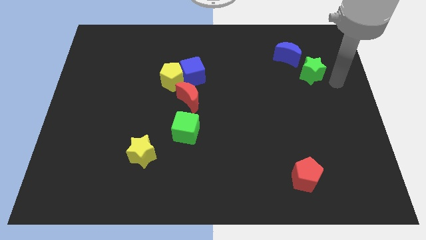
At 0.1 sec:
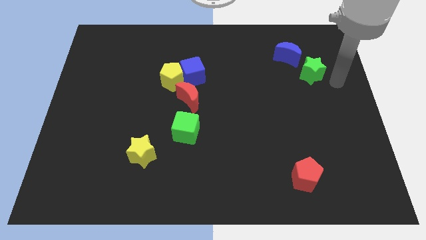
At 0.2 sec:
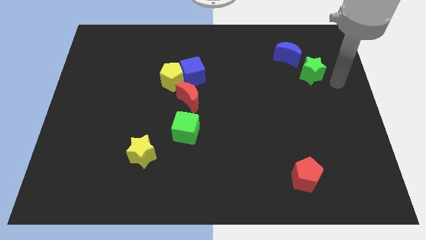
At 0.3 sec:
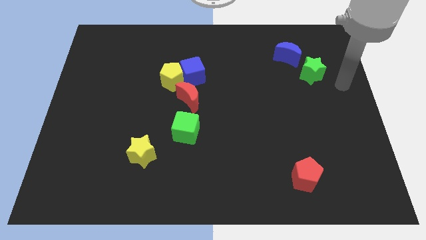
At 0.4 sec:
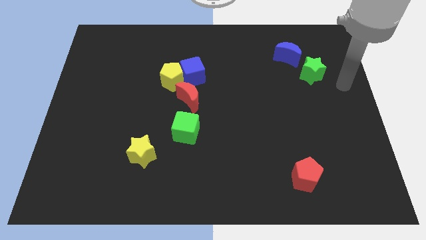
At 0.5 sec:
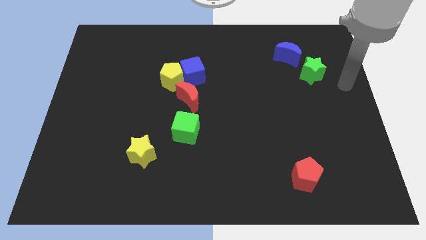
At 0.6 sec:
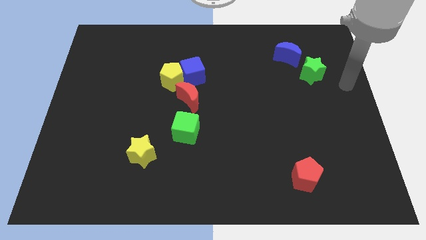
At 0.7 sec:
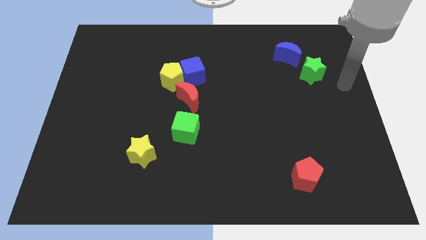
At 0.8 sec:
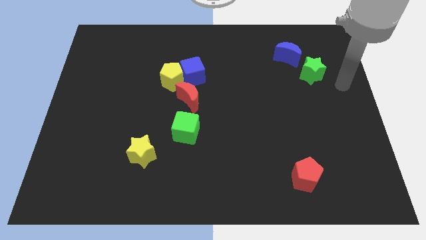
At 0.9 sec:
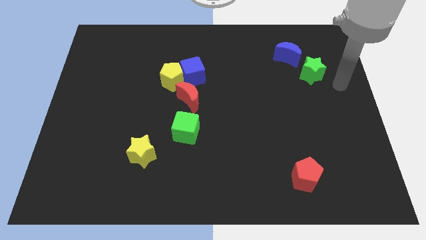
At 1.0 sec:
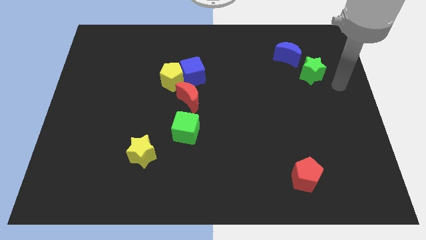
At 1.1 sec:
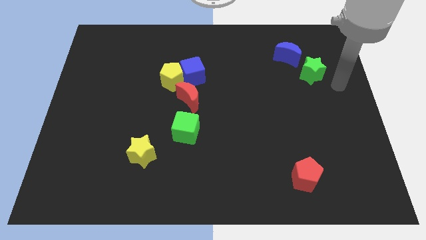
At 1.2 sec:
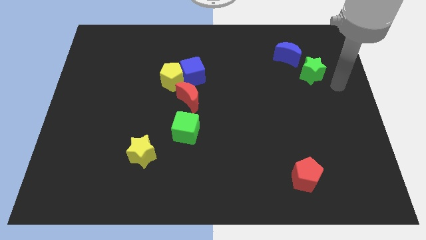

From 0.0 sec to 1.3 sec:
move your arm diagonal right of green star

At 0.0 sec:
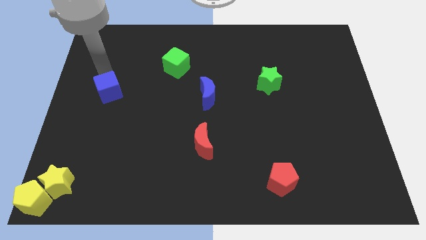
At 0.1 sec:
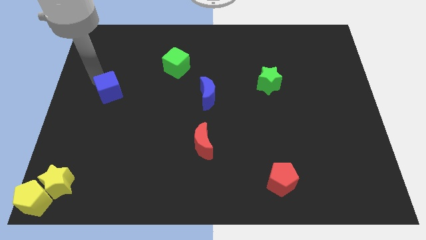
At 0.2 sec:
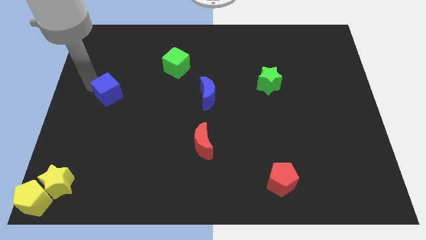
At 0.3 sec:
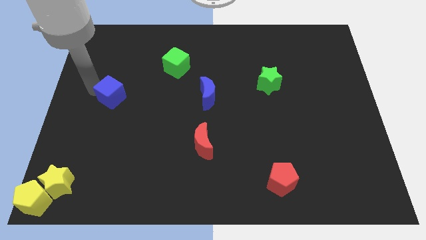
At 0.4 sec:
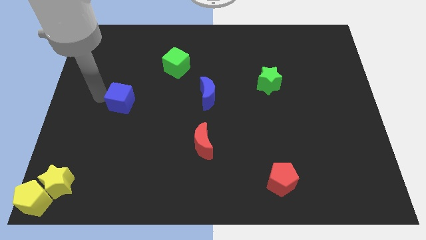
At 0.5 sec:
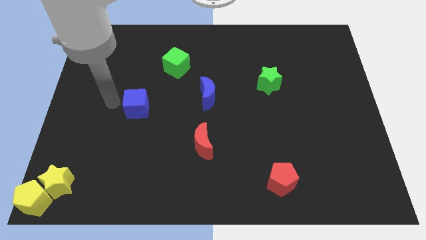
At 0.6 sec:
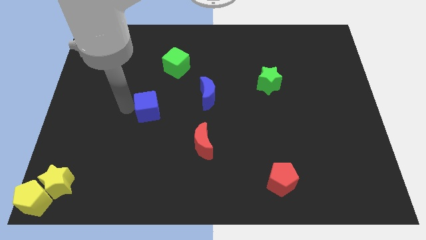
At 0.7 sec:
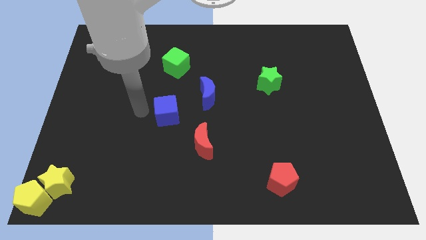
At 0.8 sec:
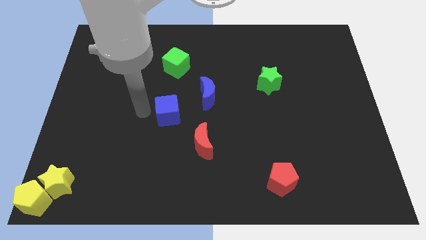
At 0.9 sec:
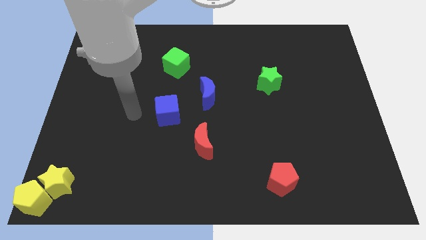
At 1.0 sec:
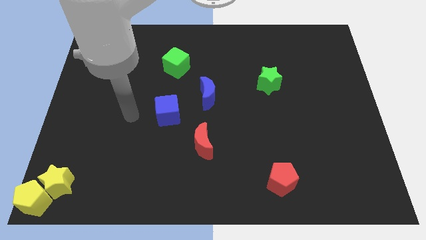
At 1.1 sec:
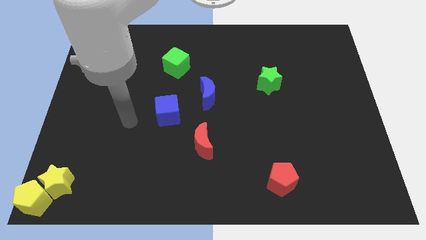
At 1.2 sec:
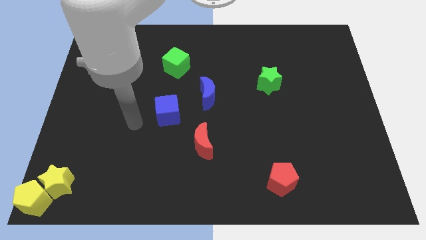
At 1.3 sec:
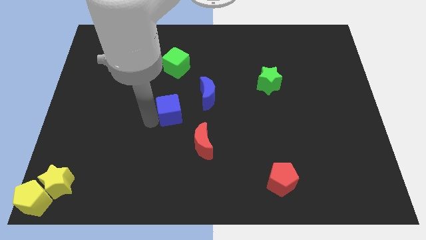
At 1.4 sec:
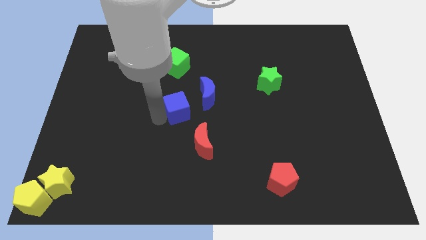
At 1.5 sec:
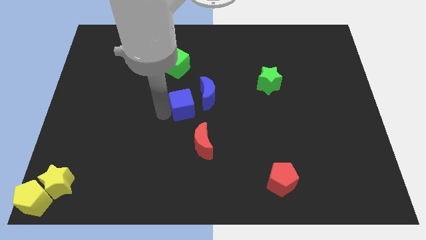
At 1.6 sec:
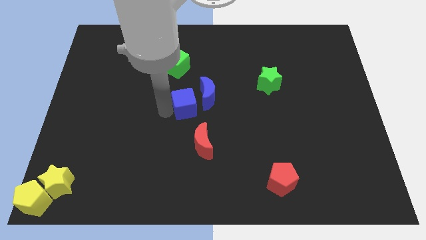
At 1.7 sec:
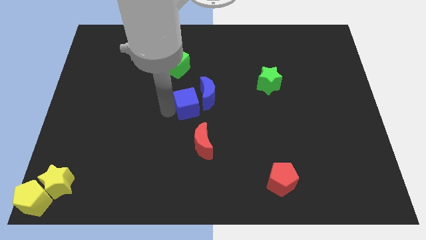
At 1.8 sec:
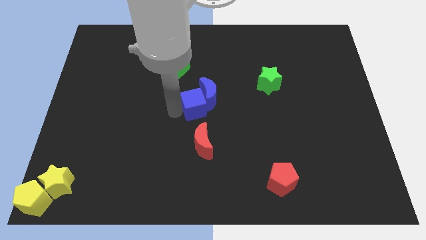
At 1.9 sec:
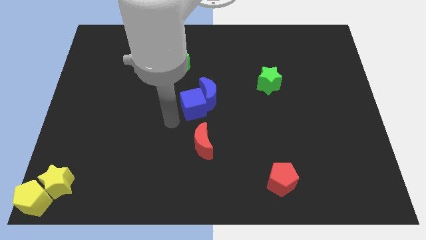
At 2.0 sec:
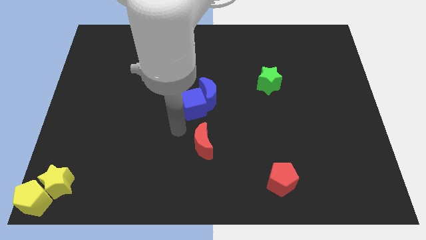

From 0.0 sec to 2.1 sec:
move the blue cube into the blue moon

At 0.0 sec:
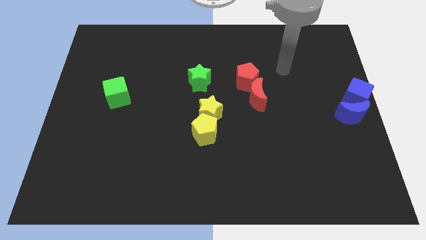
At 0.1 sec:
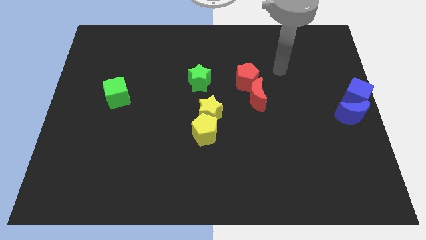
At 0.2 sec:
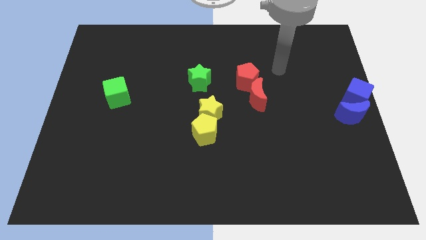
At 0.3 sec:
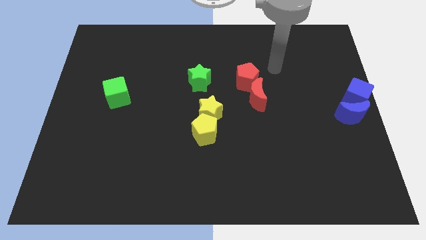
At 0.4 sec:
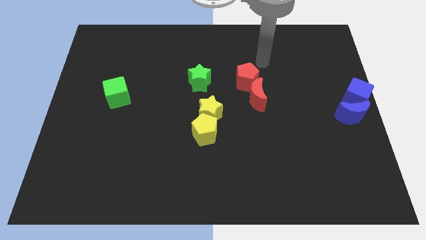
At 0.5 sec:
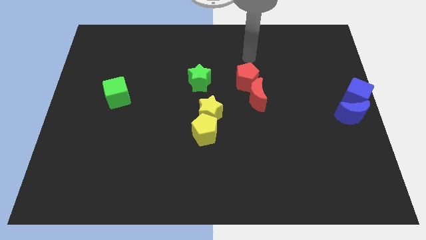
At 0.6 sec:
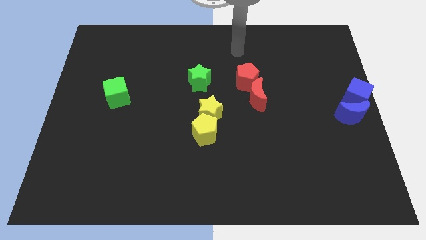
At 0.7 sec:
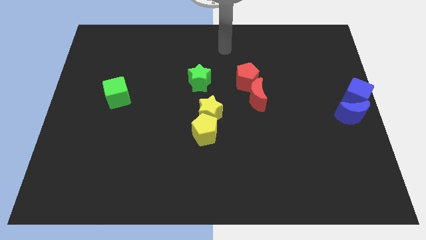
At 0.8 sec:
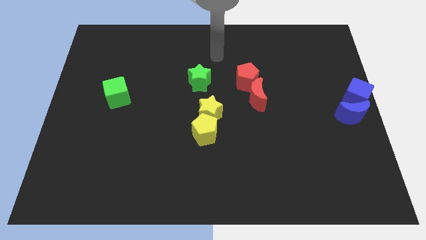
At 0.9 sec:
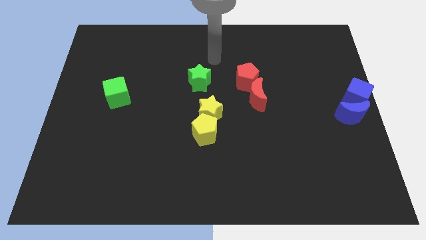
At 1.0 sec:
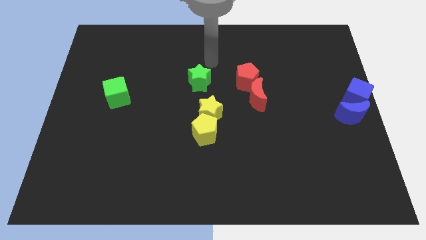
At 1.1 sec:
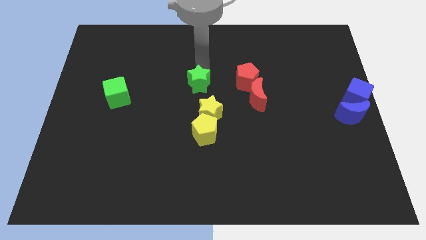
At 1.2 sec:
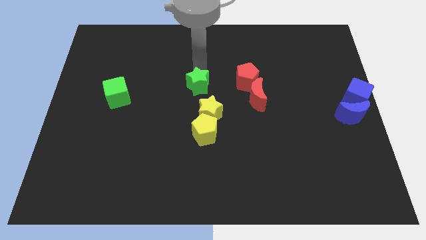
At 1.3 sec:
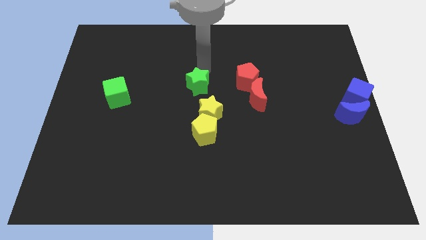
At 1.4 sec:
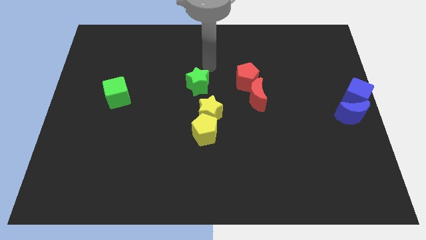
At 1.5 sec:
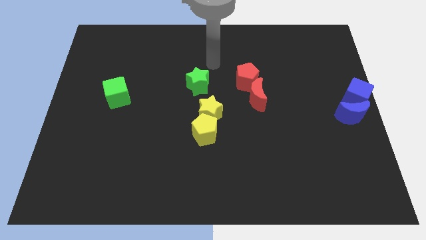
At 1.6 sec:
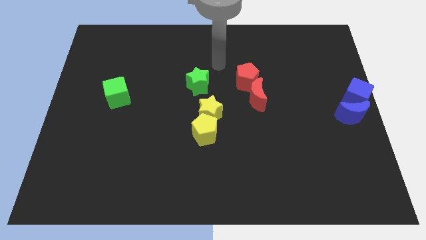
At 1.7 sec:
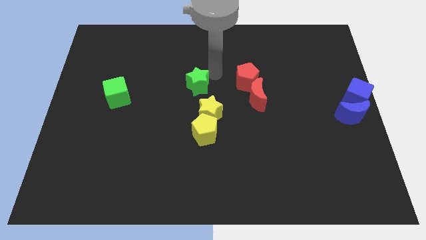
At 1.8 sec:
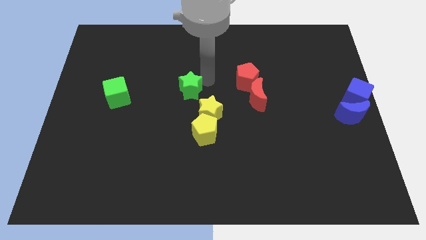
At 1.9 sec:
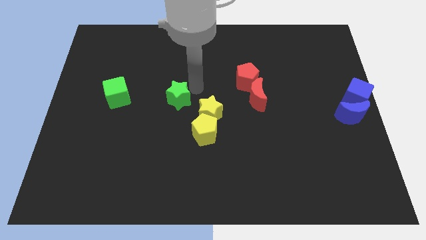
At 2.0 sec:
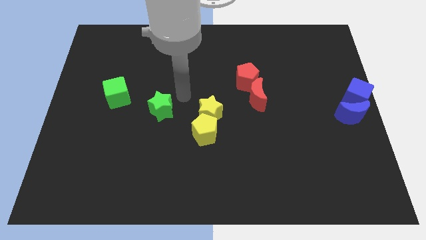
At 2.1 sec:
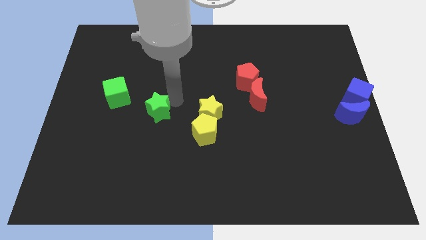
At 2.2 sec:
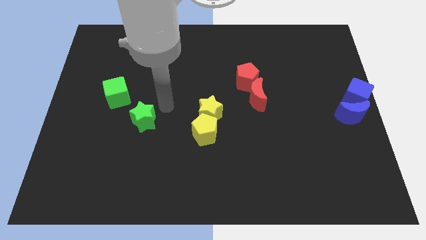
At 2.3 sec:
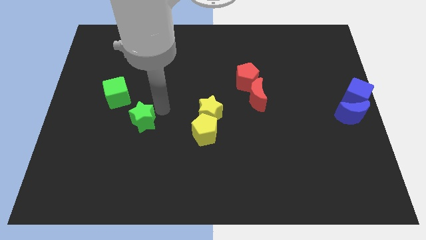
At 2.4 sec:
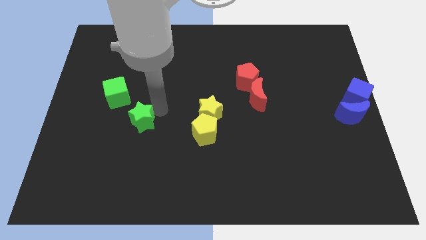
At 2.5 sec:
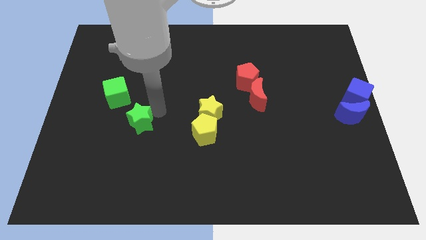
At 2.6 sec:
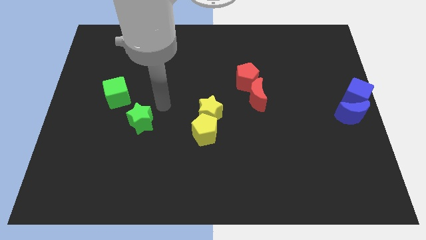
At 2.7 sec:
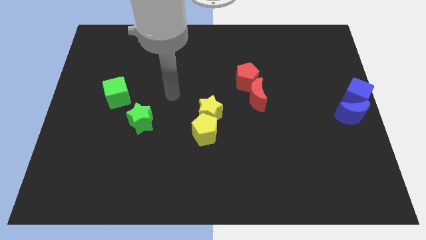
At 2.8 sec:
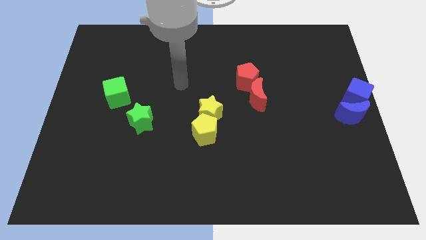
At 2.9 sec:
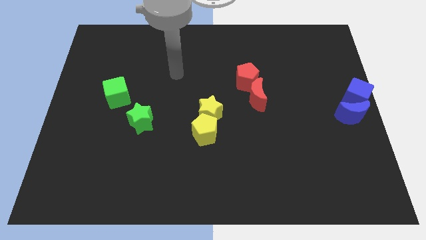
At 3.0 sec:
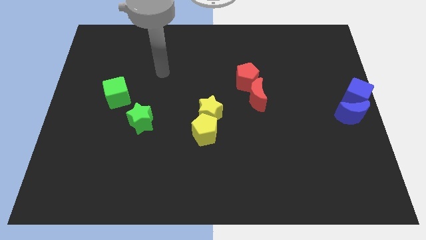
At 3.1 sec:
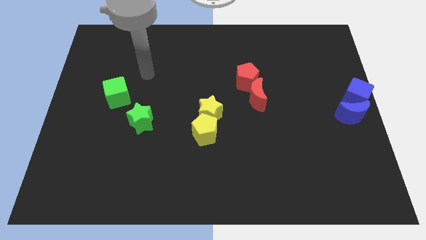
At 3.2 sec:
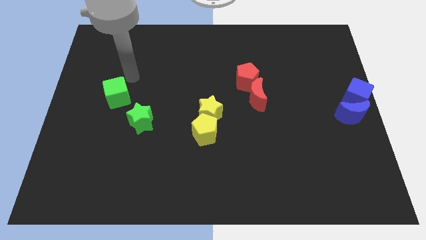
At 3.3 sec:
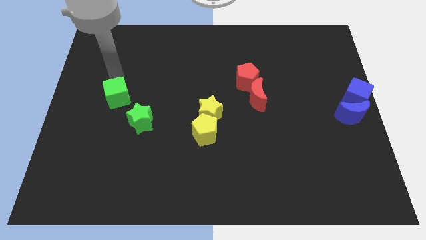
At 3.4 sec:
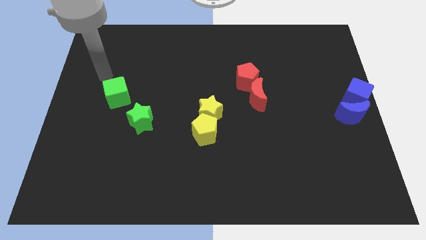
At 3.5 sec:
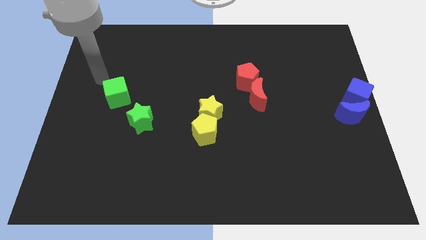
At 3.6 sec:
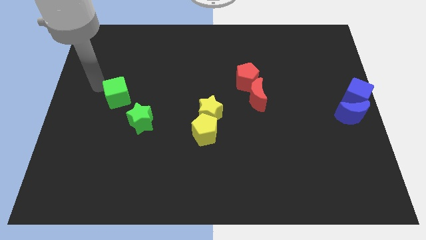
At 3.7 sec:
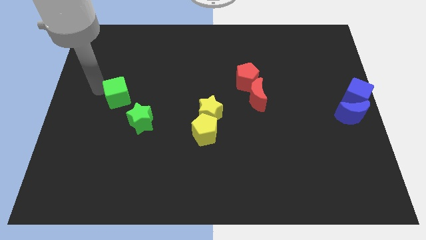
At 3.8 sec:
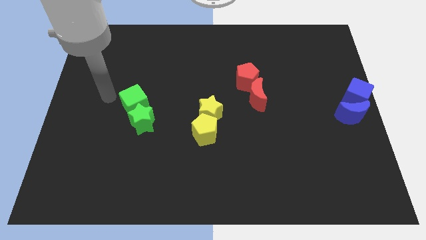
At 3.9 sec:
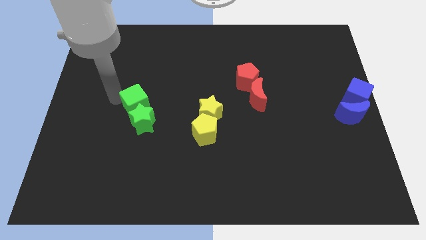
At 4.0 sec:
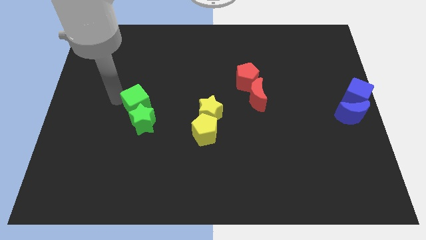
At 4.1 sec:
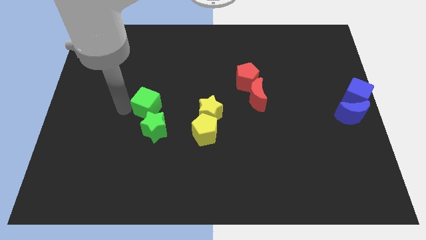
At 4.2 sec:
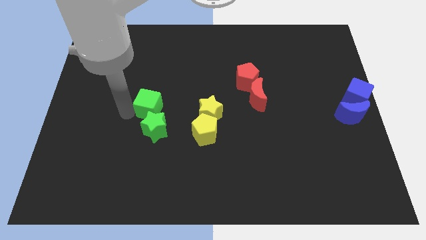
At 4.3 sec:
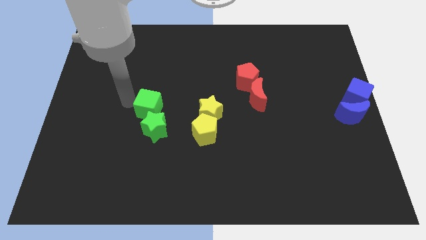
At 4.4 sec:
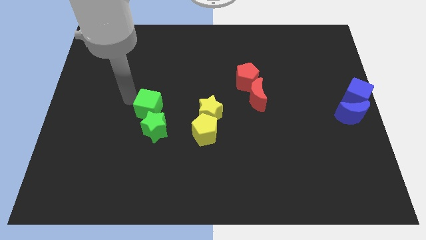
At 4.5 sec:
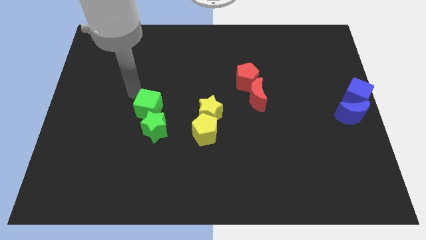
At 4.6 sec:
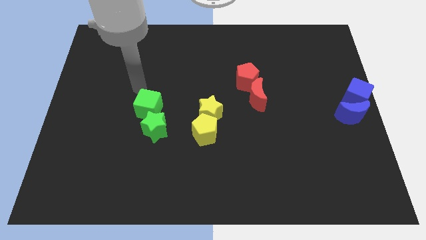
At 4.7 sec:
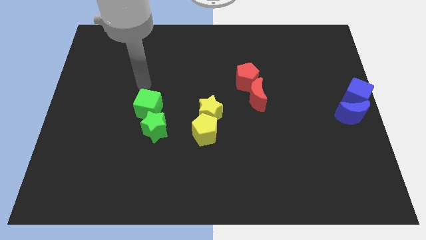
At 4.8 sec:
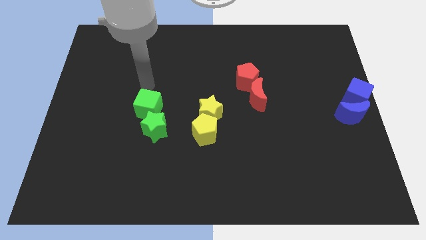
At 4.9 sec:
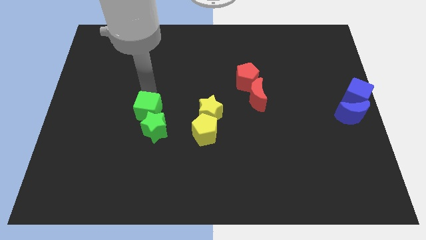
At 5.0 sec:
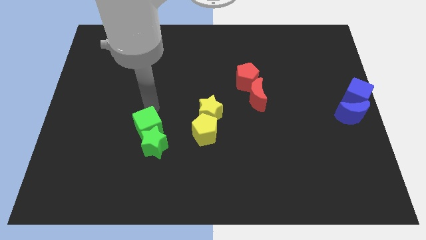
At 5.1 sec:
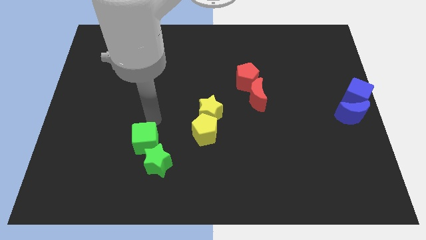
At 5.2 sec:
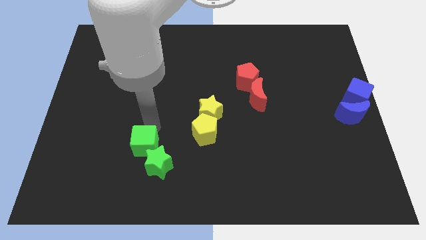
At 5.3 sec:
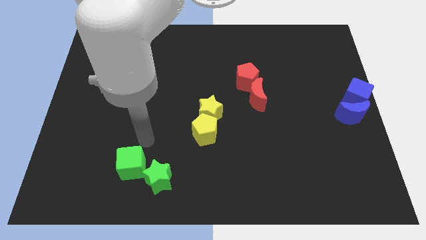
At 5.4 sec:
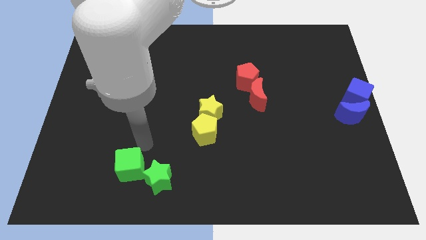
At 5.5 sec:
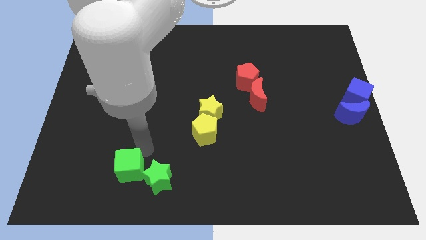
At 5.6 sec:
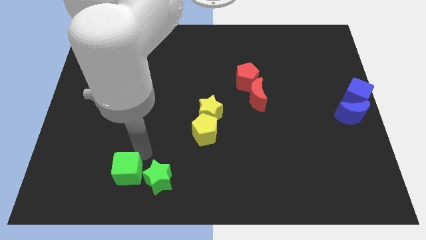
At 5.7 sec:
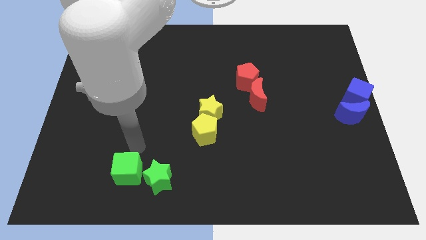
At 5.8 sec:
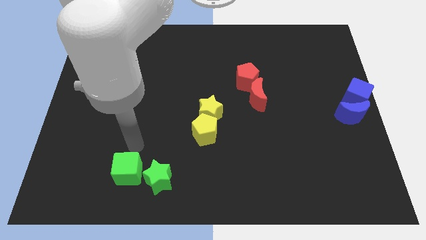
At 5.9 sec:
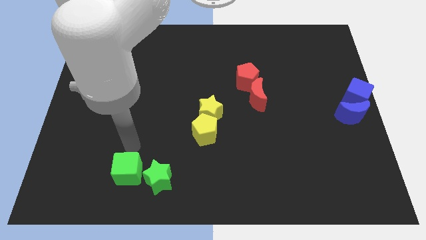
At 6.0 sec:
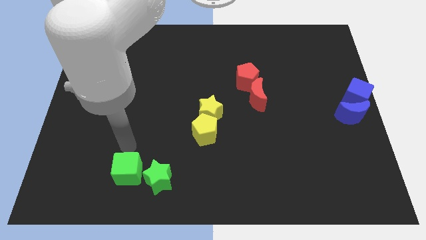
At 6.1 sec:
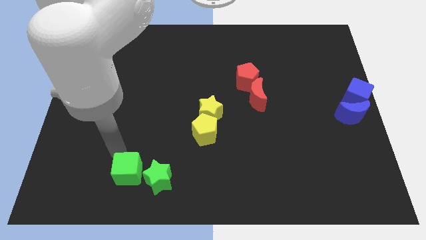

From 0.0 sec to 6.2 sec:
push the green star and the green cube towards the bottom of the board
